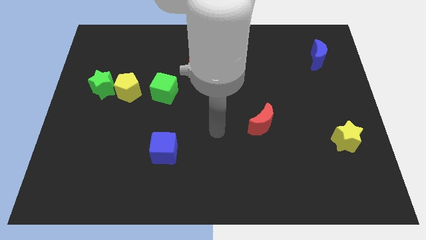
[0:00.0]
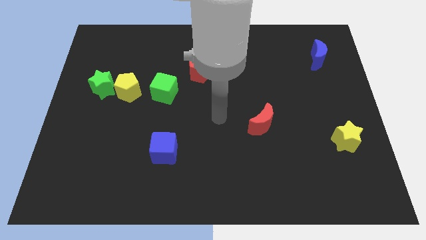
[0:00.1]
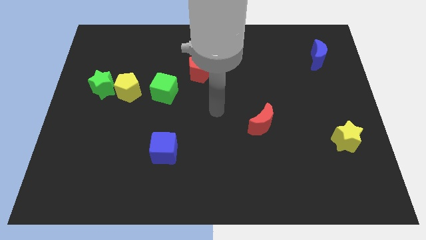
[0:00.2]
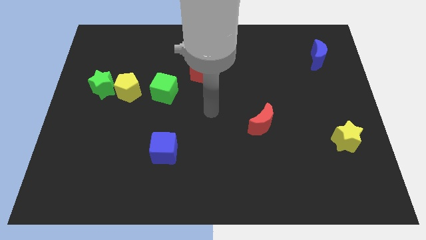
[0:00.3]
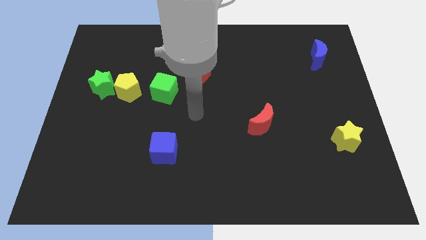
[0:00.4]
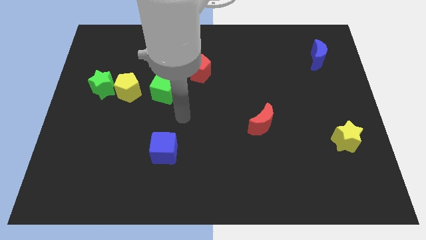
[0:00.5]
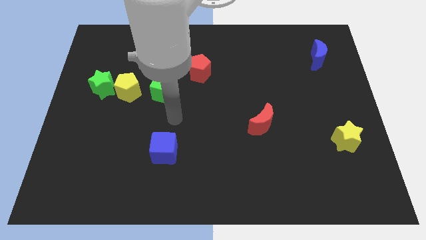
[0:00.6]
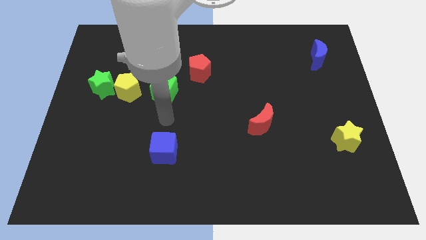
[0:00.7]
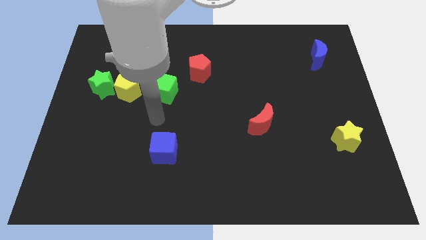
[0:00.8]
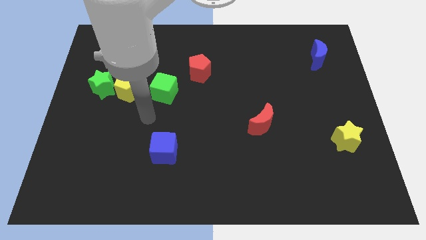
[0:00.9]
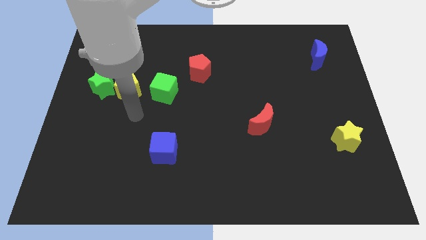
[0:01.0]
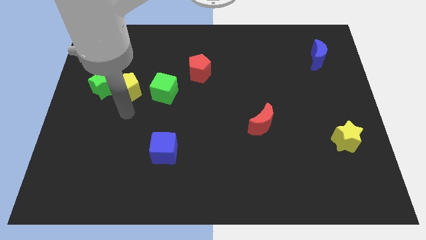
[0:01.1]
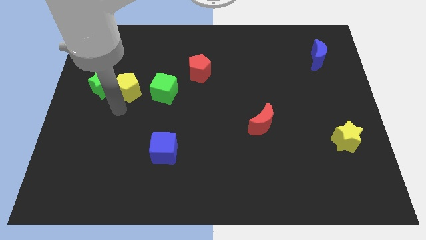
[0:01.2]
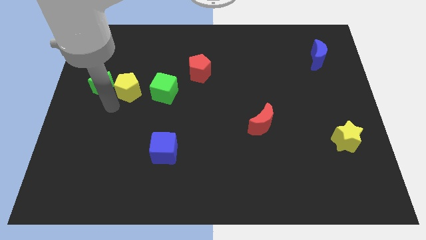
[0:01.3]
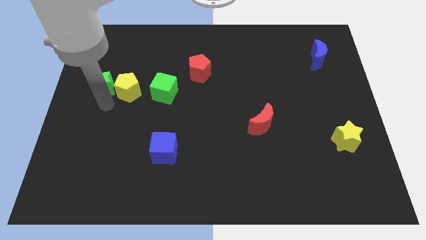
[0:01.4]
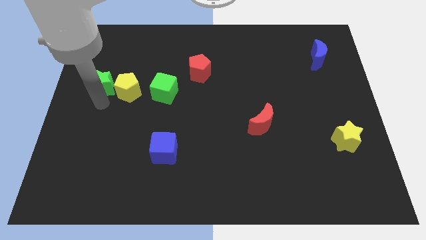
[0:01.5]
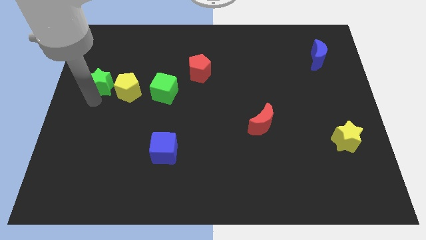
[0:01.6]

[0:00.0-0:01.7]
point your arm towards the bottom of the green star

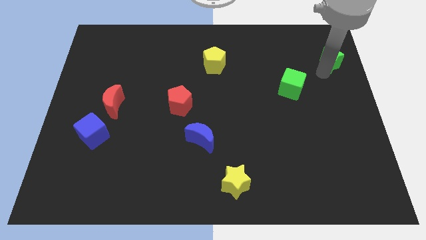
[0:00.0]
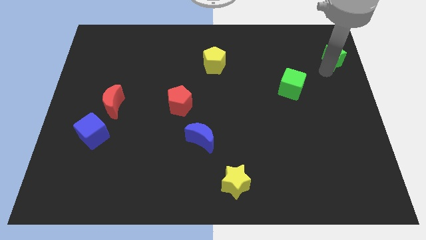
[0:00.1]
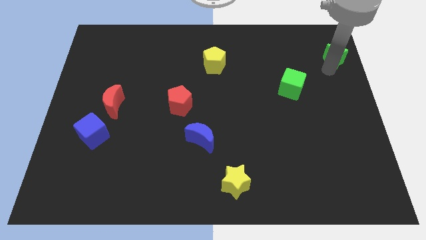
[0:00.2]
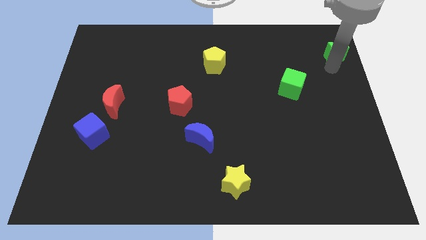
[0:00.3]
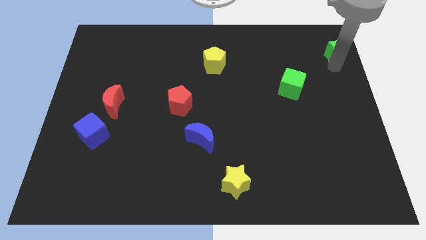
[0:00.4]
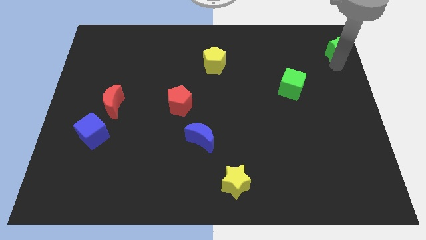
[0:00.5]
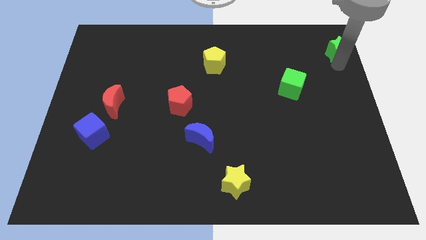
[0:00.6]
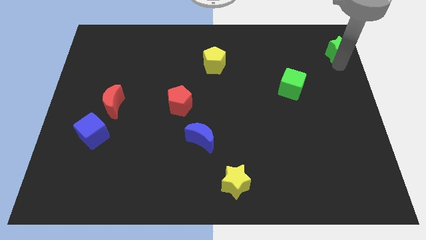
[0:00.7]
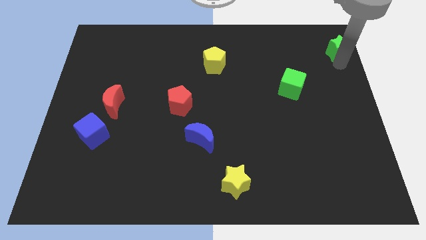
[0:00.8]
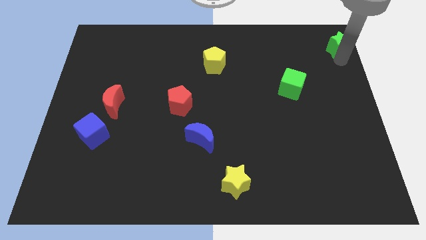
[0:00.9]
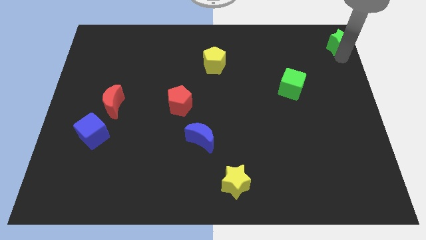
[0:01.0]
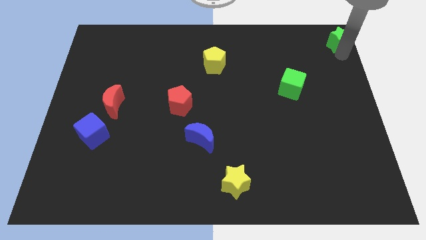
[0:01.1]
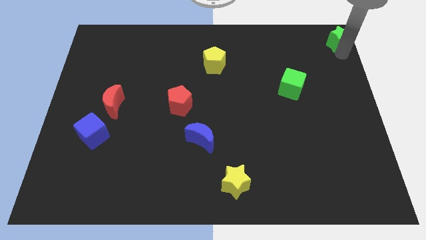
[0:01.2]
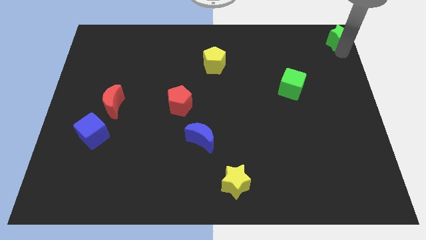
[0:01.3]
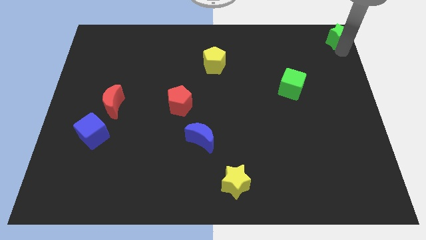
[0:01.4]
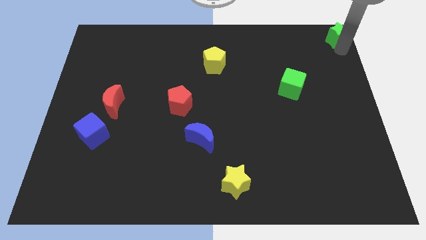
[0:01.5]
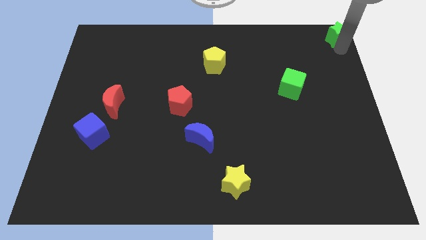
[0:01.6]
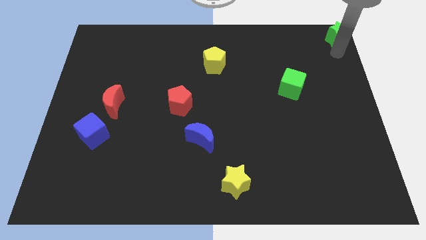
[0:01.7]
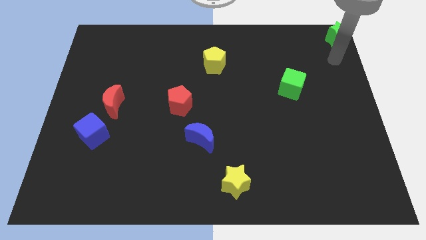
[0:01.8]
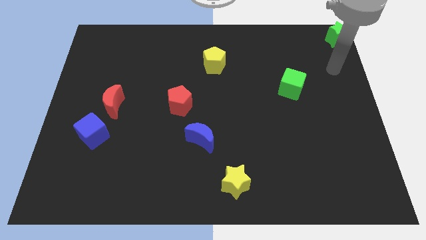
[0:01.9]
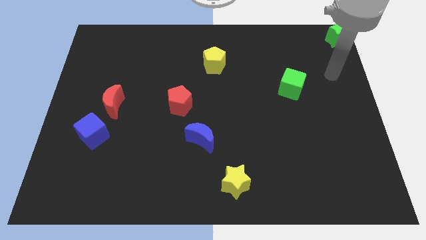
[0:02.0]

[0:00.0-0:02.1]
move the green star towards the top right corner of the board

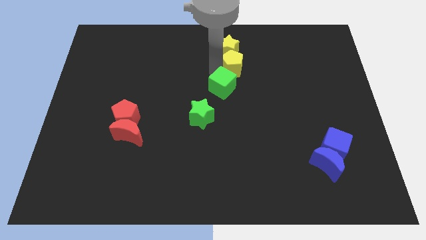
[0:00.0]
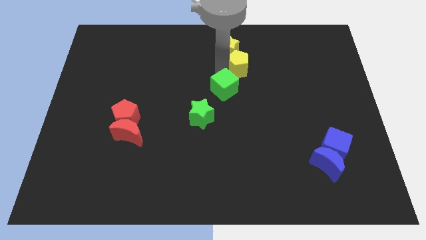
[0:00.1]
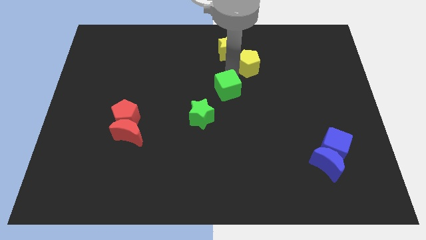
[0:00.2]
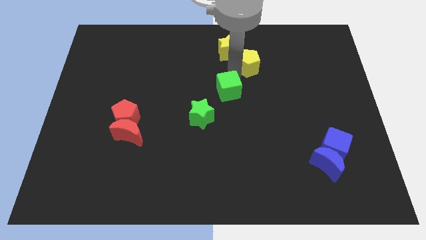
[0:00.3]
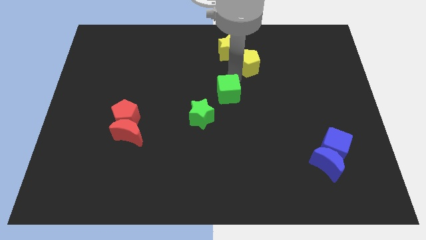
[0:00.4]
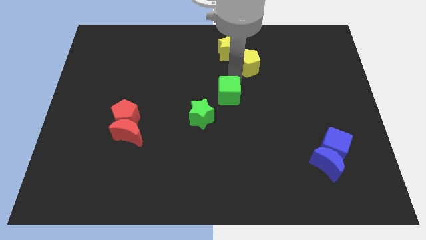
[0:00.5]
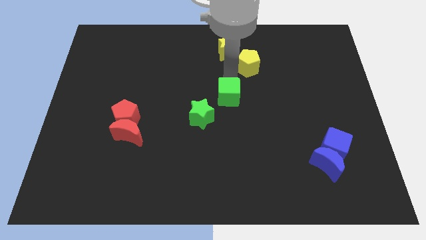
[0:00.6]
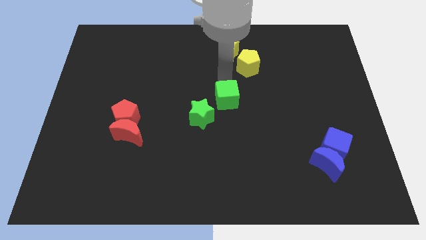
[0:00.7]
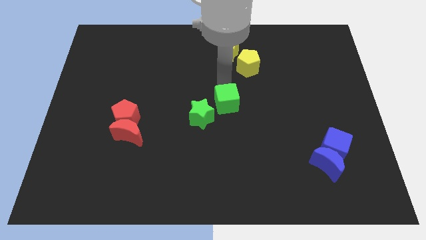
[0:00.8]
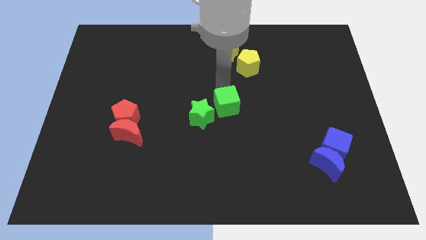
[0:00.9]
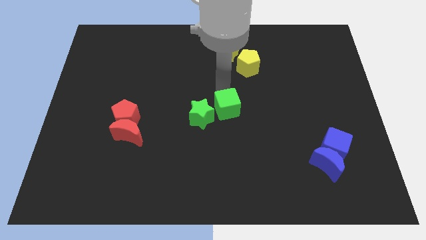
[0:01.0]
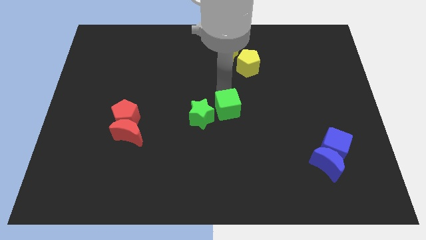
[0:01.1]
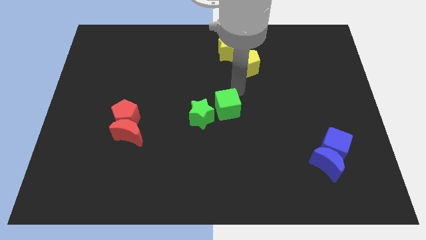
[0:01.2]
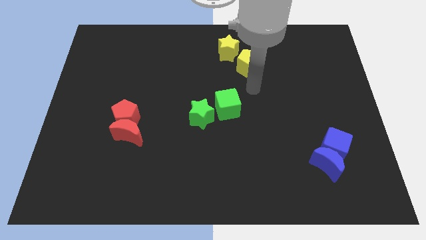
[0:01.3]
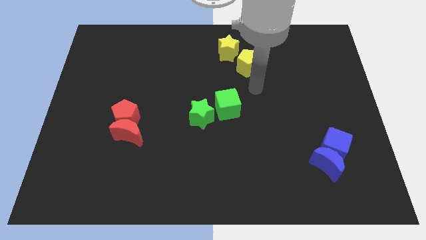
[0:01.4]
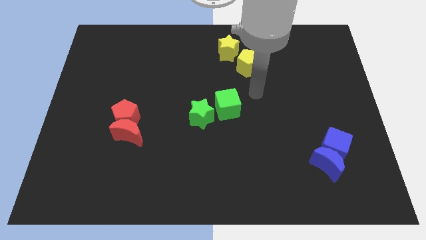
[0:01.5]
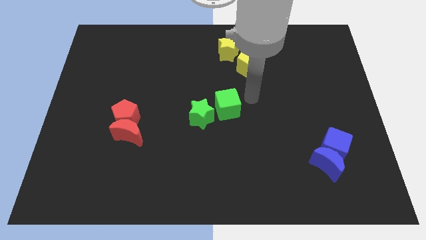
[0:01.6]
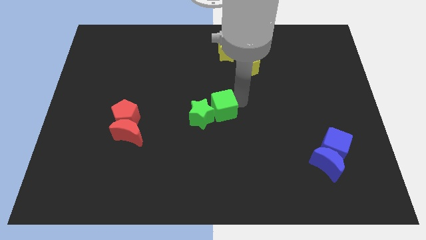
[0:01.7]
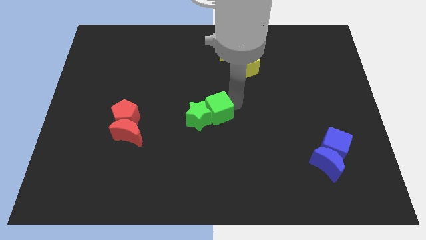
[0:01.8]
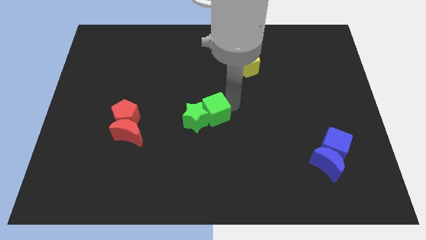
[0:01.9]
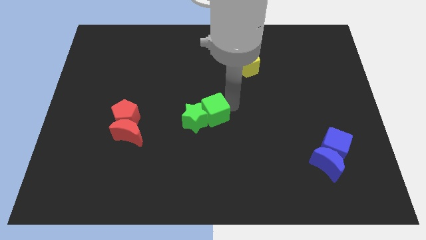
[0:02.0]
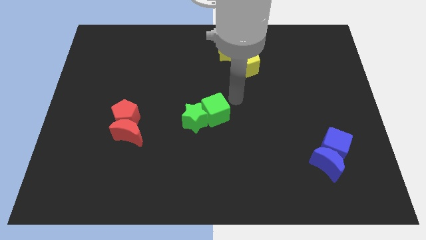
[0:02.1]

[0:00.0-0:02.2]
push the green cube into the green star

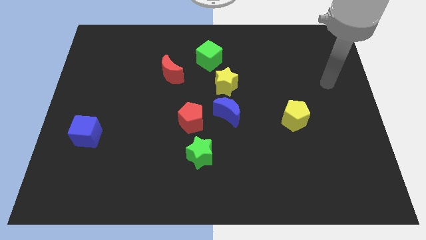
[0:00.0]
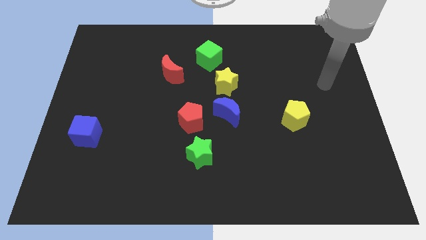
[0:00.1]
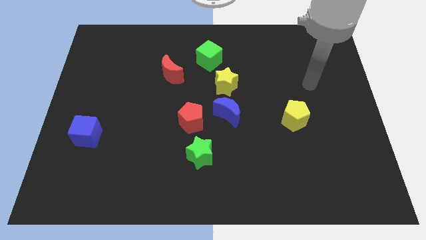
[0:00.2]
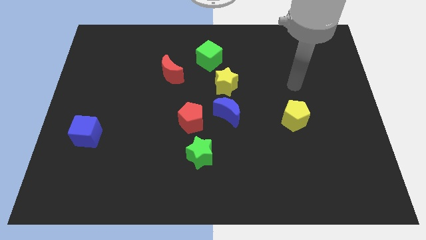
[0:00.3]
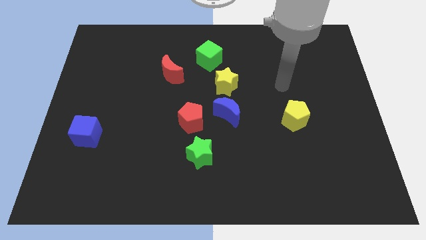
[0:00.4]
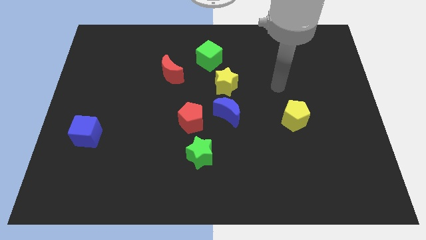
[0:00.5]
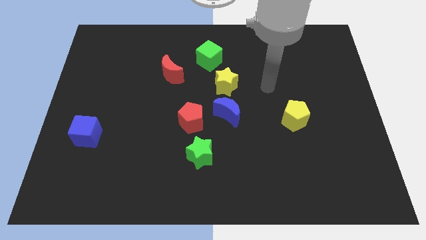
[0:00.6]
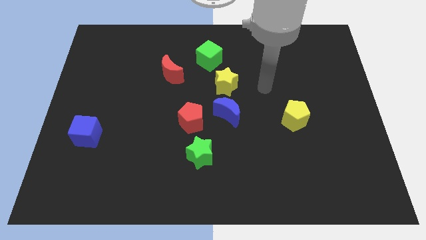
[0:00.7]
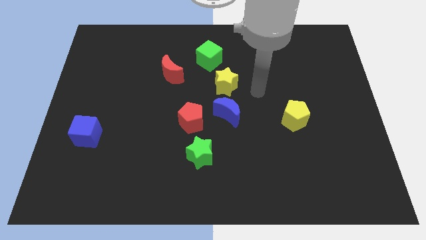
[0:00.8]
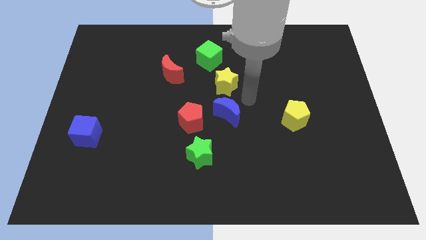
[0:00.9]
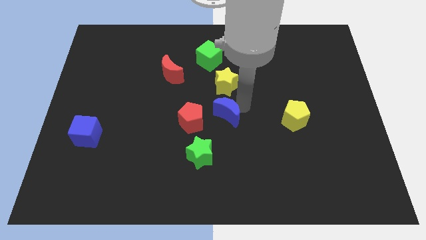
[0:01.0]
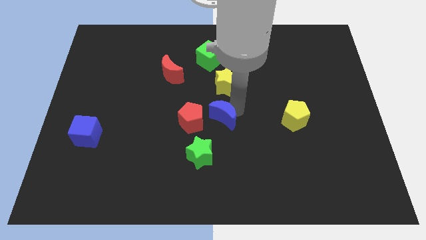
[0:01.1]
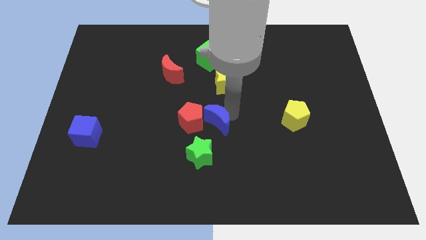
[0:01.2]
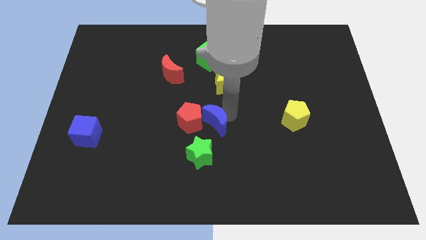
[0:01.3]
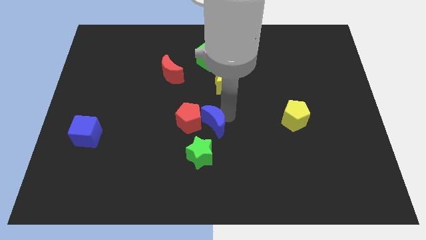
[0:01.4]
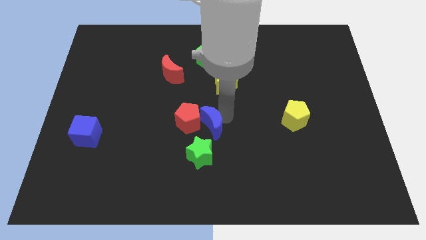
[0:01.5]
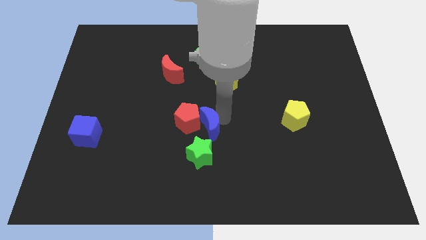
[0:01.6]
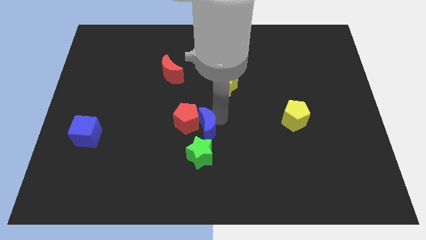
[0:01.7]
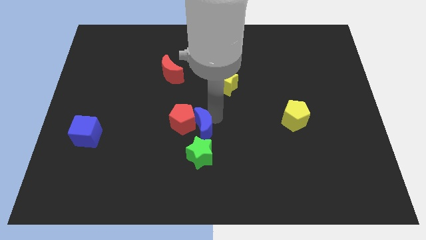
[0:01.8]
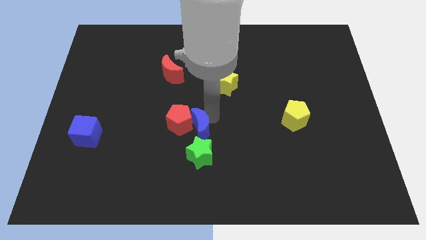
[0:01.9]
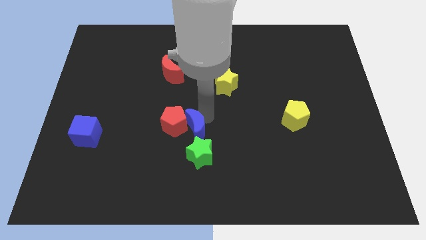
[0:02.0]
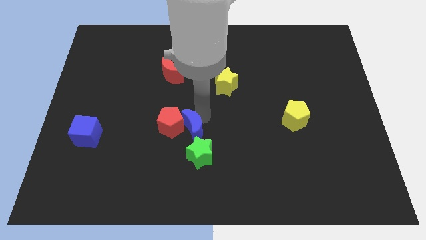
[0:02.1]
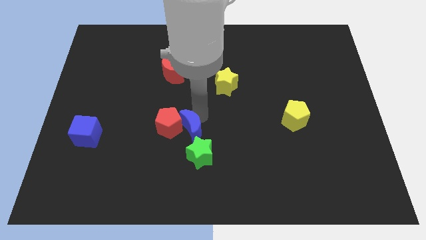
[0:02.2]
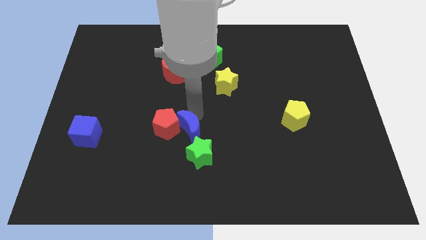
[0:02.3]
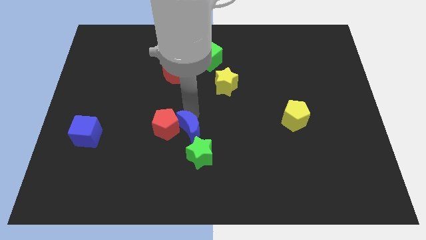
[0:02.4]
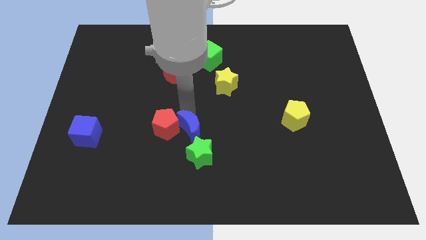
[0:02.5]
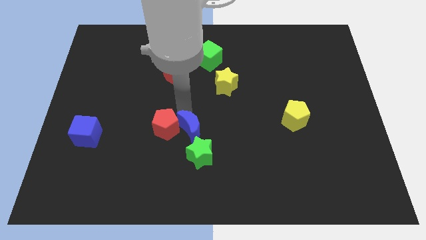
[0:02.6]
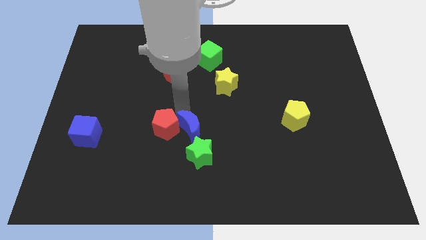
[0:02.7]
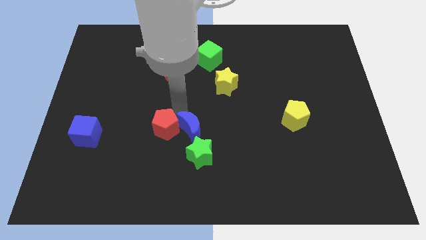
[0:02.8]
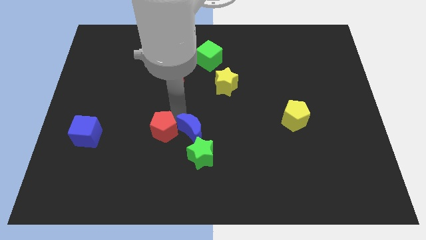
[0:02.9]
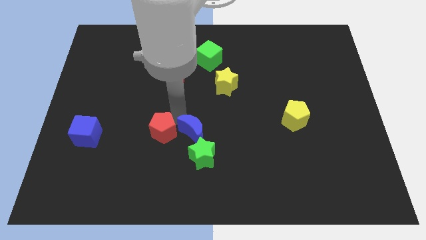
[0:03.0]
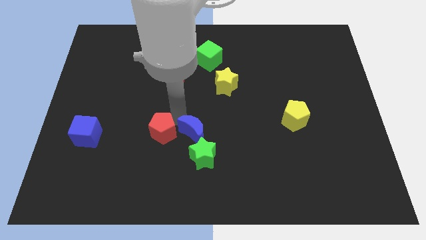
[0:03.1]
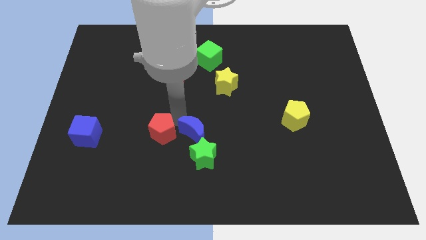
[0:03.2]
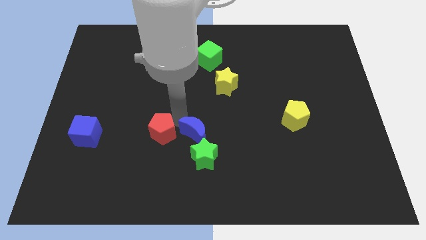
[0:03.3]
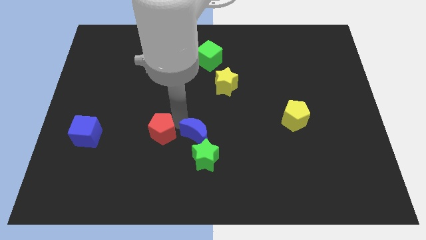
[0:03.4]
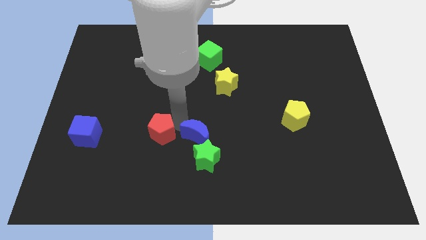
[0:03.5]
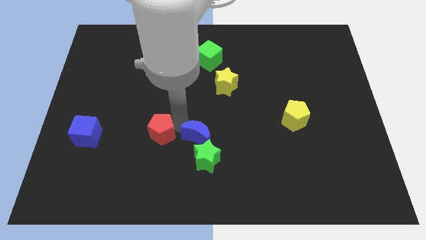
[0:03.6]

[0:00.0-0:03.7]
push the blue crescent into the red pentagon
